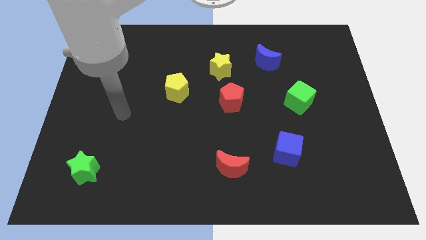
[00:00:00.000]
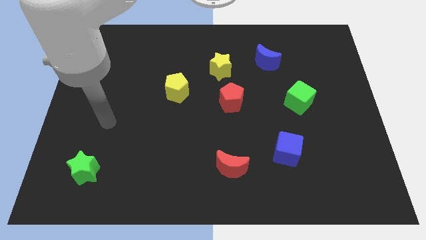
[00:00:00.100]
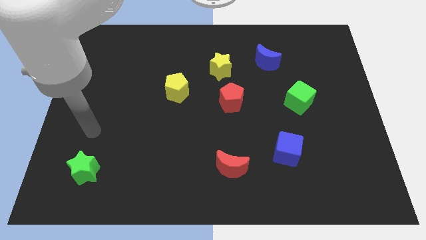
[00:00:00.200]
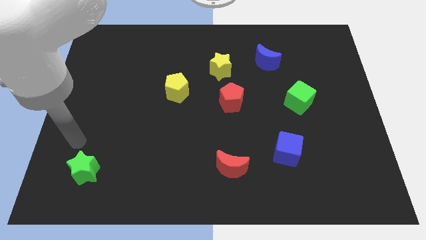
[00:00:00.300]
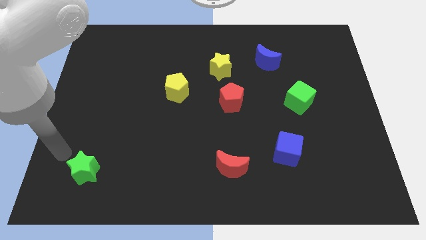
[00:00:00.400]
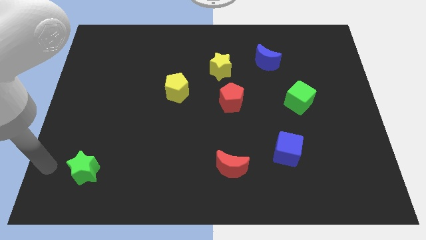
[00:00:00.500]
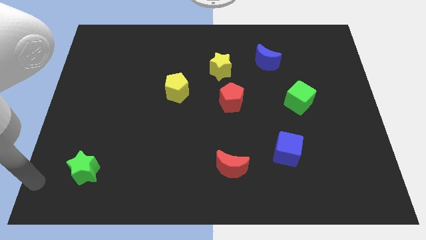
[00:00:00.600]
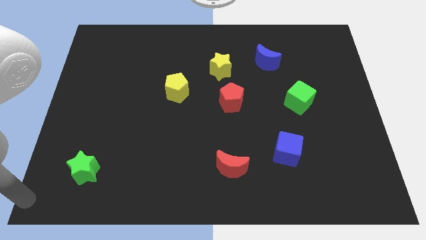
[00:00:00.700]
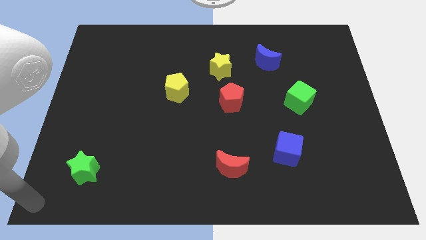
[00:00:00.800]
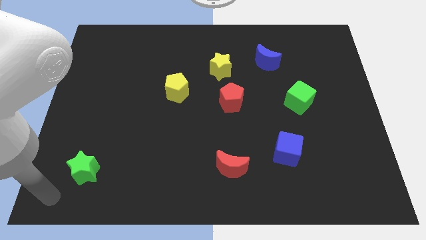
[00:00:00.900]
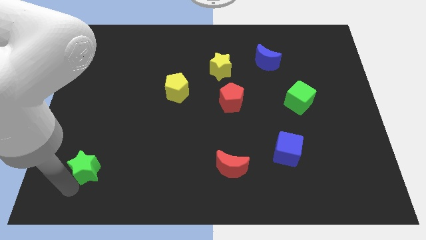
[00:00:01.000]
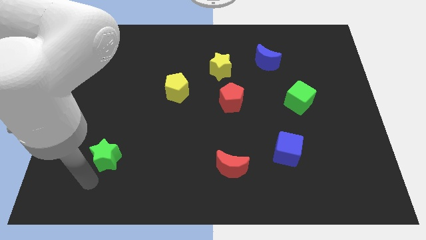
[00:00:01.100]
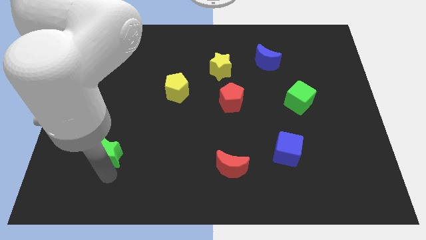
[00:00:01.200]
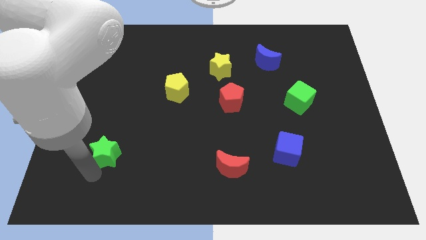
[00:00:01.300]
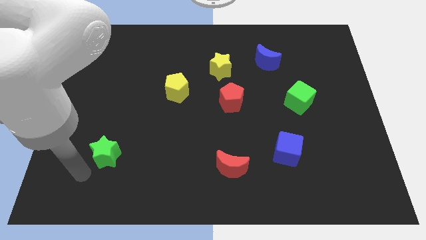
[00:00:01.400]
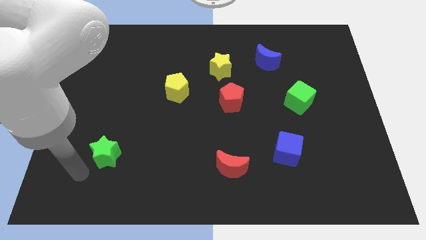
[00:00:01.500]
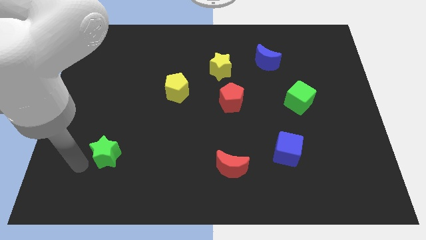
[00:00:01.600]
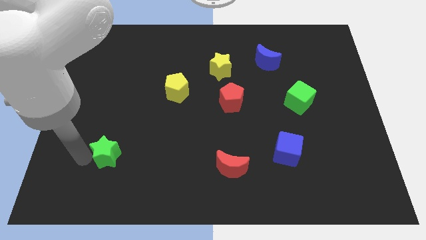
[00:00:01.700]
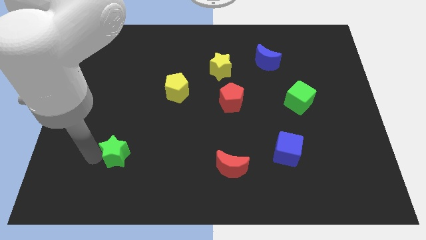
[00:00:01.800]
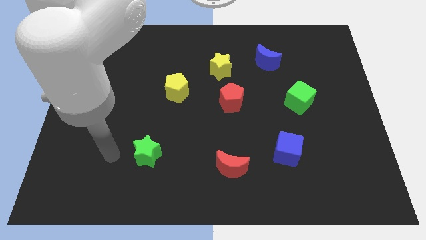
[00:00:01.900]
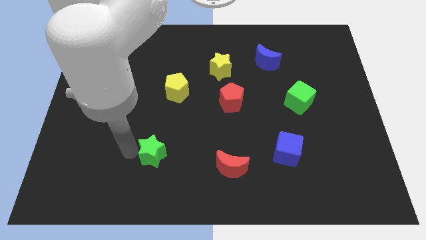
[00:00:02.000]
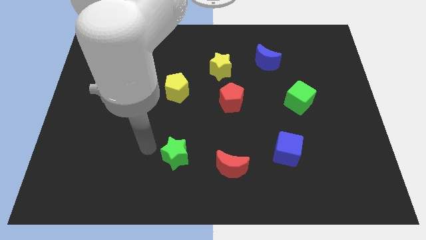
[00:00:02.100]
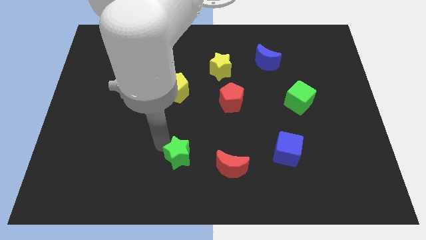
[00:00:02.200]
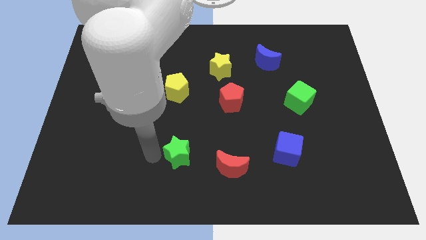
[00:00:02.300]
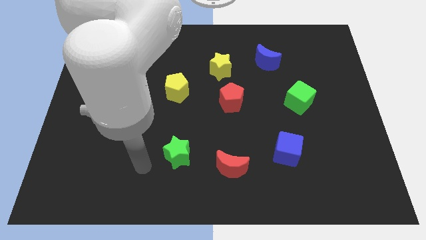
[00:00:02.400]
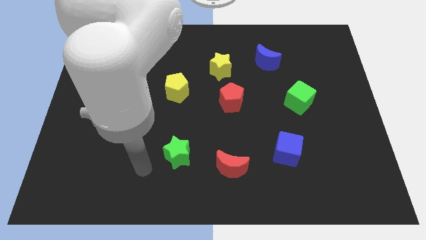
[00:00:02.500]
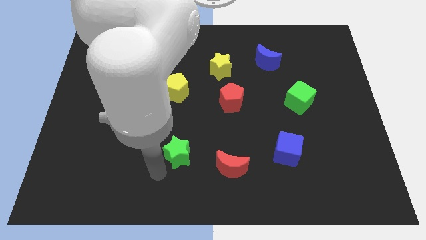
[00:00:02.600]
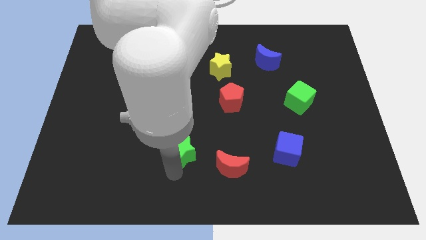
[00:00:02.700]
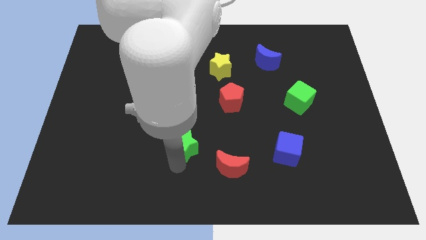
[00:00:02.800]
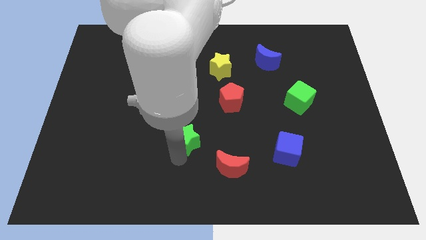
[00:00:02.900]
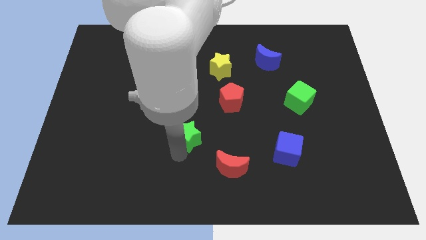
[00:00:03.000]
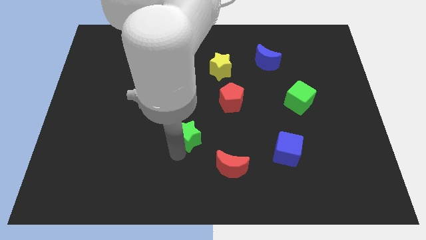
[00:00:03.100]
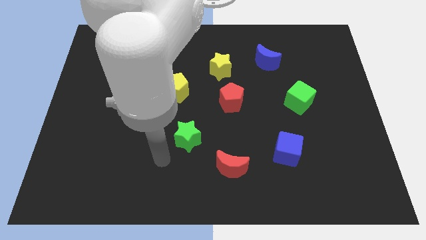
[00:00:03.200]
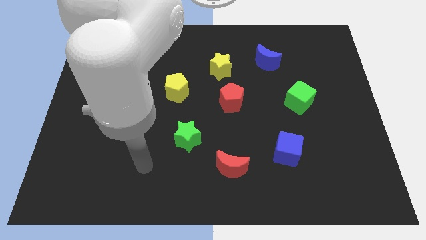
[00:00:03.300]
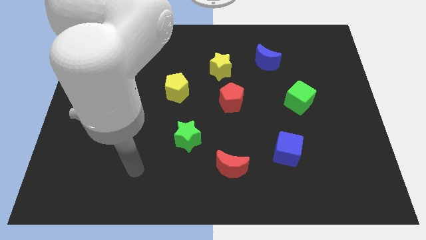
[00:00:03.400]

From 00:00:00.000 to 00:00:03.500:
place the green star underneath the yellow pentagon

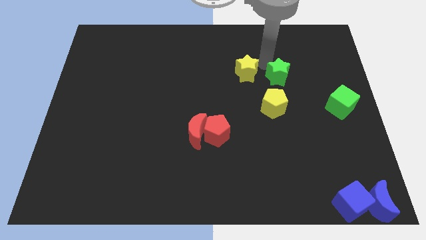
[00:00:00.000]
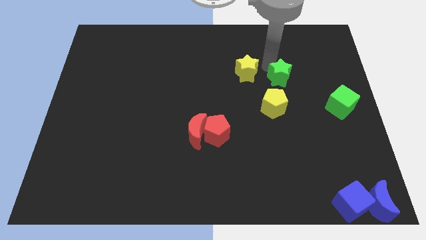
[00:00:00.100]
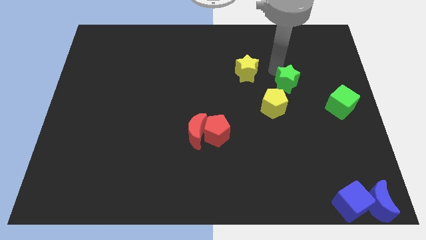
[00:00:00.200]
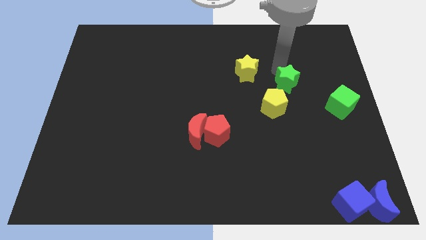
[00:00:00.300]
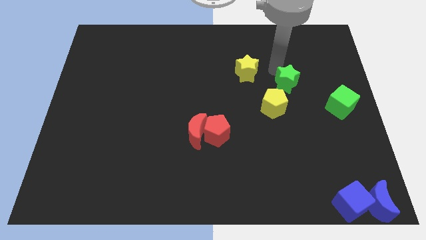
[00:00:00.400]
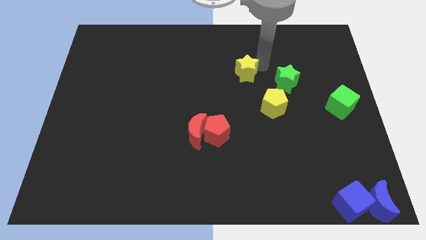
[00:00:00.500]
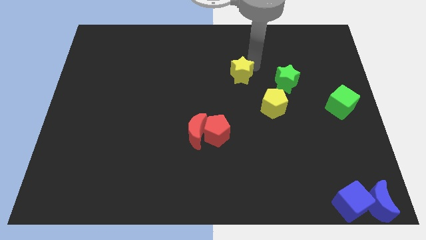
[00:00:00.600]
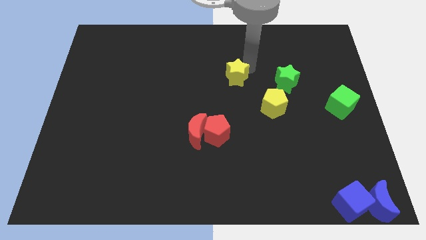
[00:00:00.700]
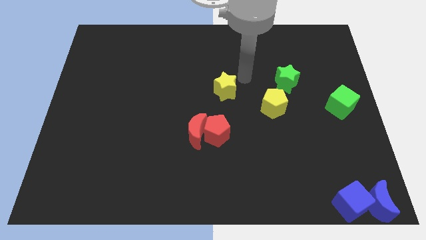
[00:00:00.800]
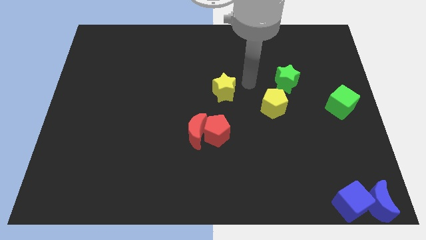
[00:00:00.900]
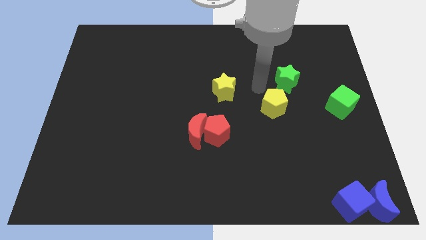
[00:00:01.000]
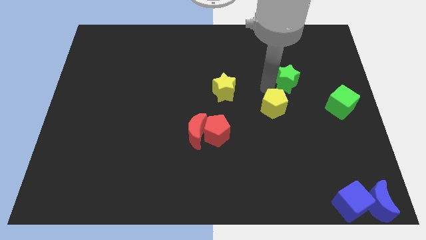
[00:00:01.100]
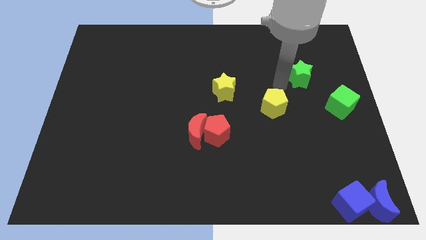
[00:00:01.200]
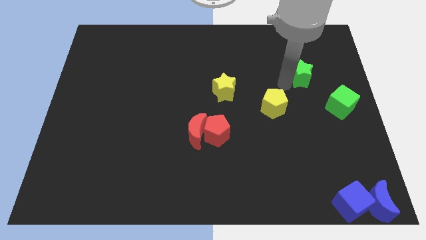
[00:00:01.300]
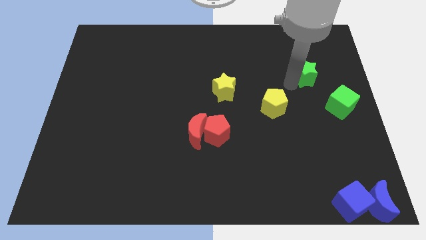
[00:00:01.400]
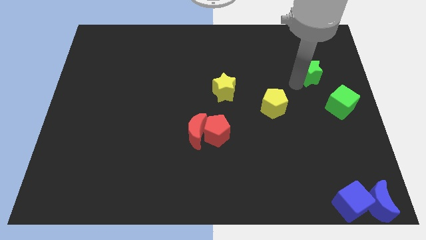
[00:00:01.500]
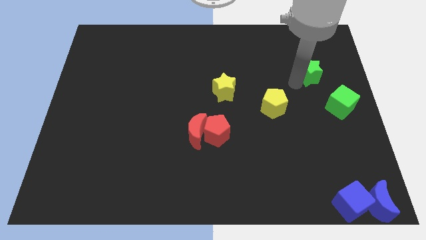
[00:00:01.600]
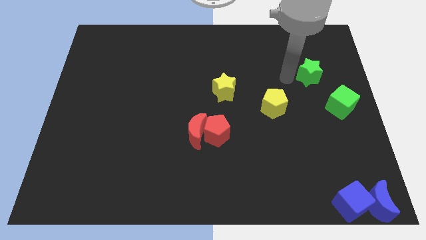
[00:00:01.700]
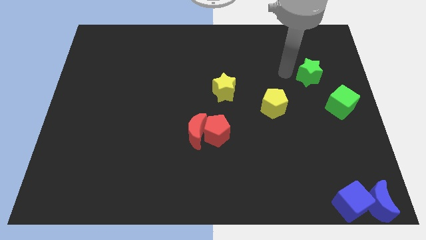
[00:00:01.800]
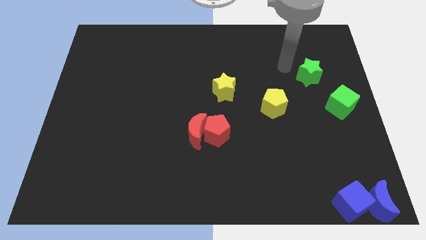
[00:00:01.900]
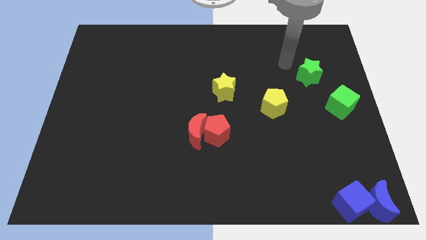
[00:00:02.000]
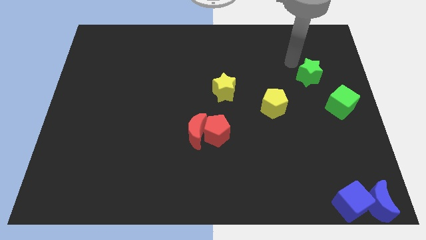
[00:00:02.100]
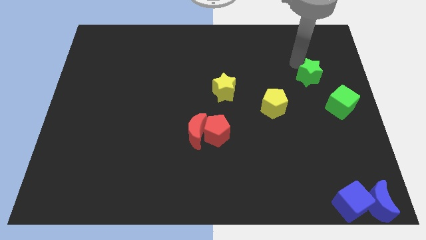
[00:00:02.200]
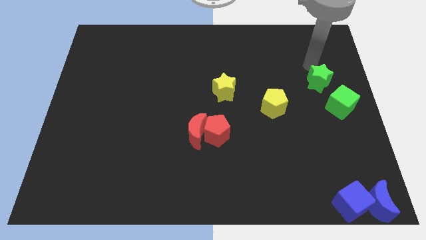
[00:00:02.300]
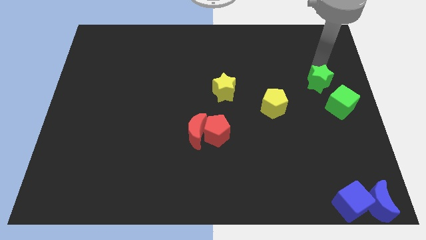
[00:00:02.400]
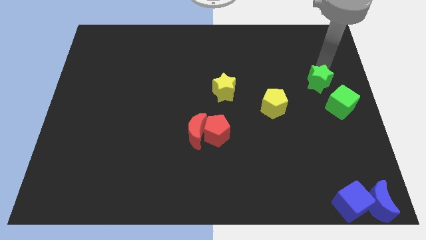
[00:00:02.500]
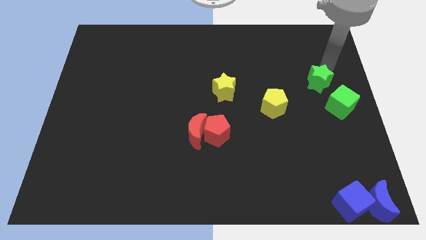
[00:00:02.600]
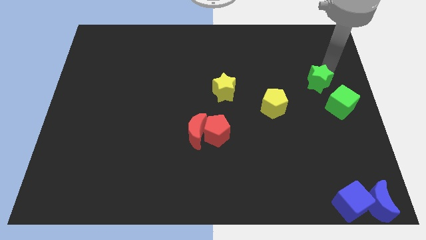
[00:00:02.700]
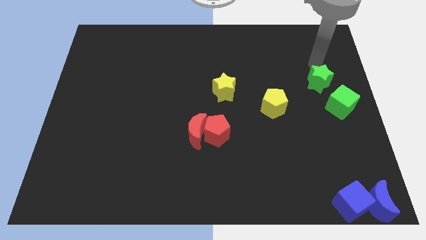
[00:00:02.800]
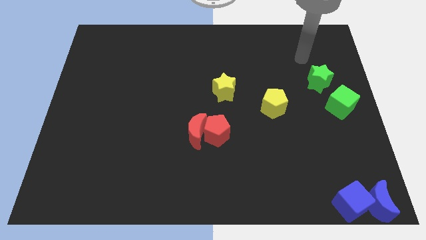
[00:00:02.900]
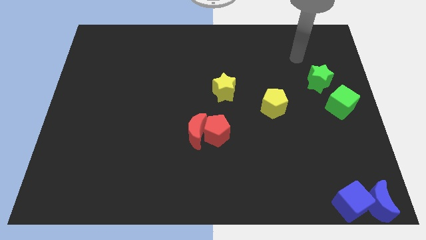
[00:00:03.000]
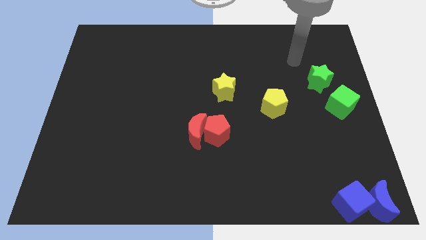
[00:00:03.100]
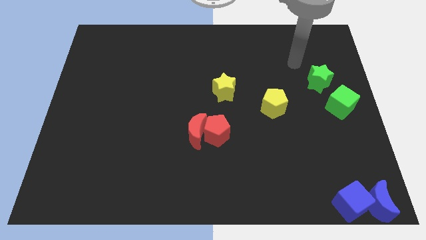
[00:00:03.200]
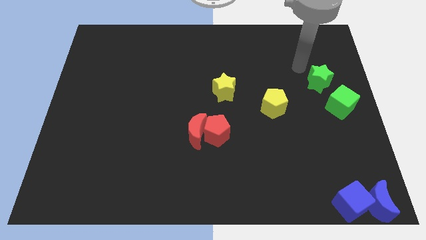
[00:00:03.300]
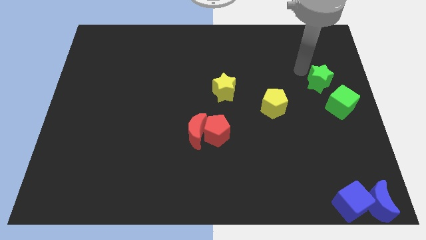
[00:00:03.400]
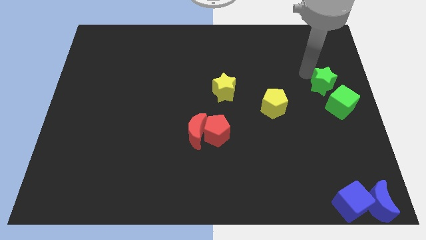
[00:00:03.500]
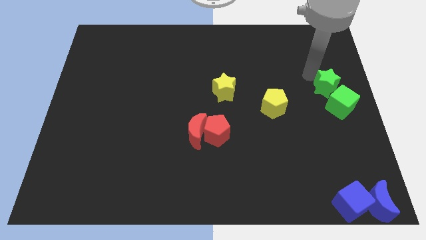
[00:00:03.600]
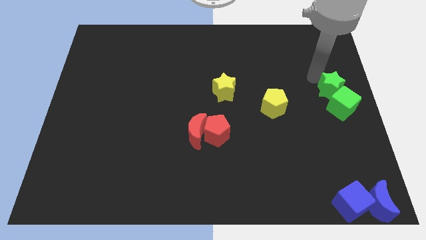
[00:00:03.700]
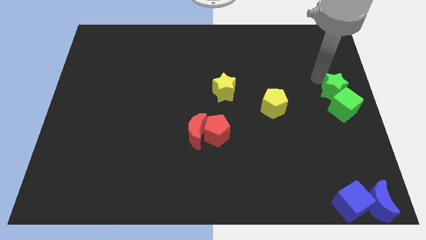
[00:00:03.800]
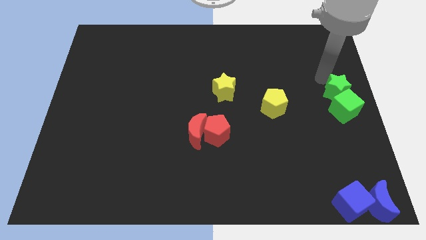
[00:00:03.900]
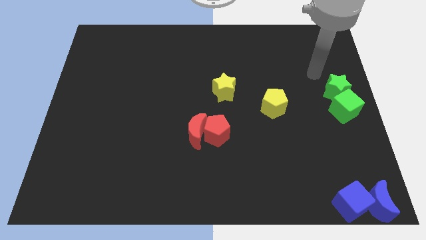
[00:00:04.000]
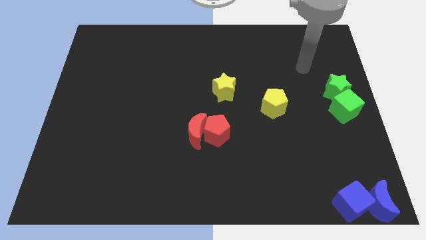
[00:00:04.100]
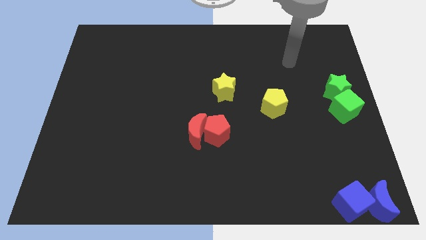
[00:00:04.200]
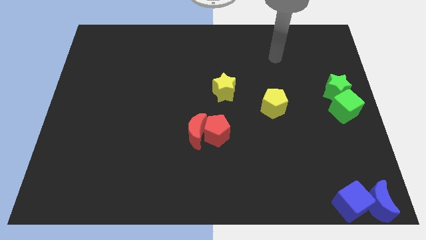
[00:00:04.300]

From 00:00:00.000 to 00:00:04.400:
place green star above green cube

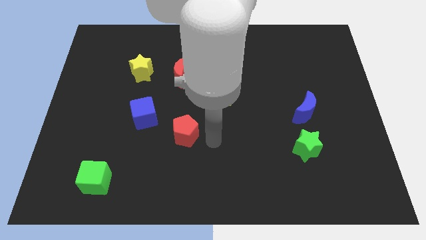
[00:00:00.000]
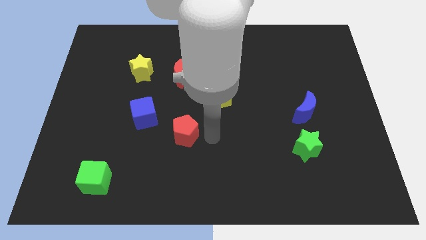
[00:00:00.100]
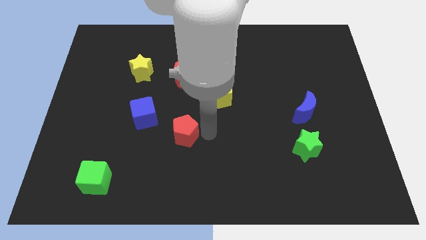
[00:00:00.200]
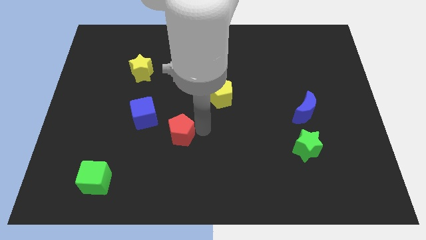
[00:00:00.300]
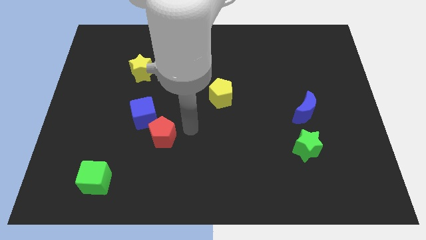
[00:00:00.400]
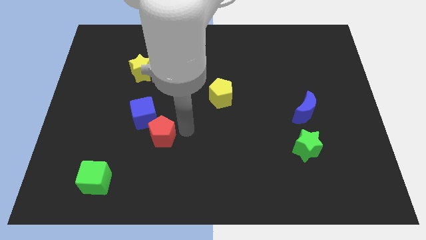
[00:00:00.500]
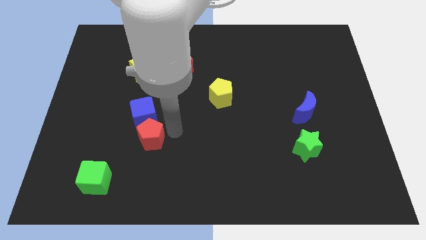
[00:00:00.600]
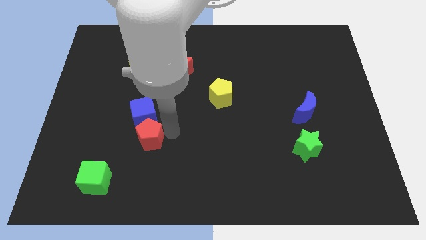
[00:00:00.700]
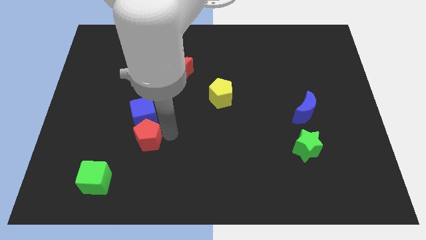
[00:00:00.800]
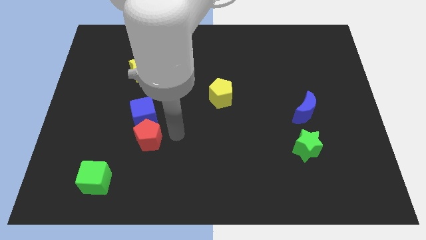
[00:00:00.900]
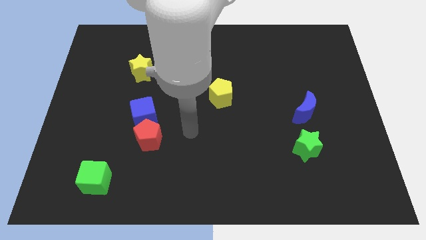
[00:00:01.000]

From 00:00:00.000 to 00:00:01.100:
slide red pentagon into blue cube
